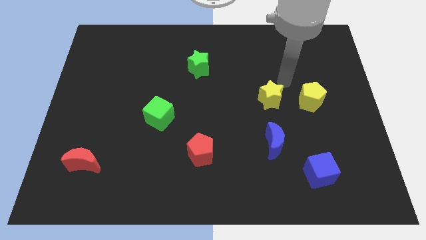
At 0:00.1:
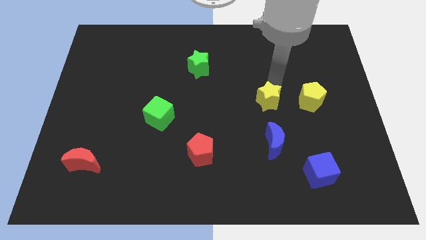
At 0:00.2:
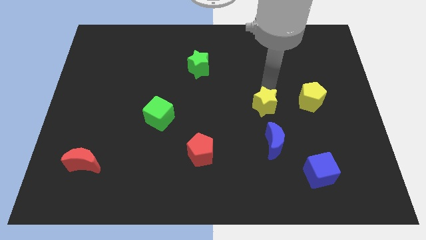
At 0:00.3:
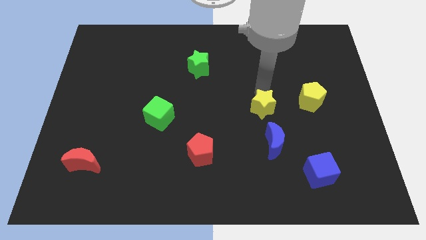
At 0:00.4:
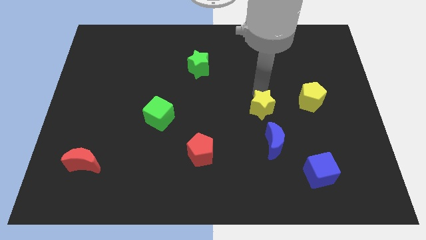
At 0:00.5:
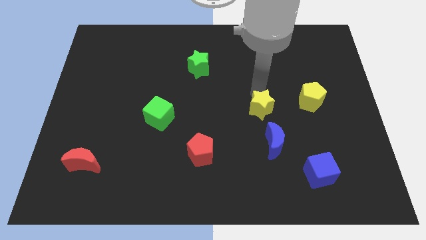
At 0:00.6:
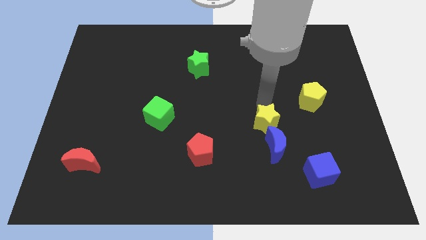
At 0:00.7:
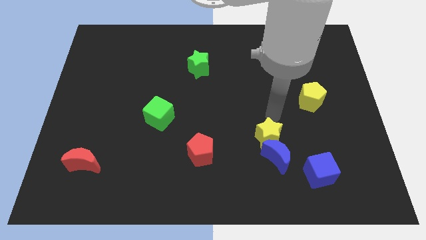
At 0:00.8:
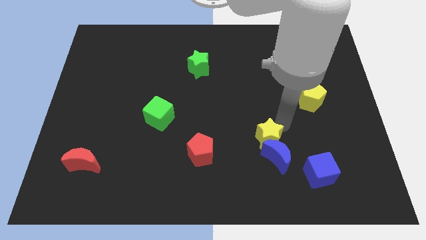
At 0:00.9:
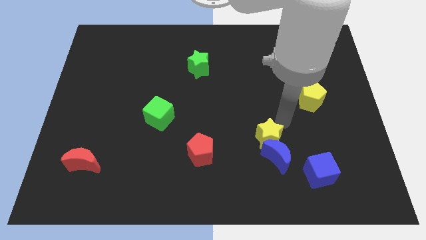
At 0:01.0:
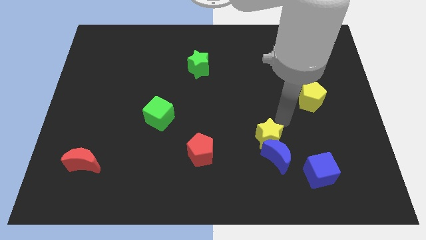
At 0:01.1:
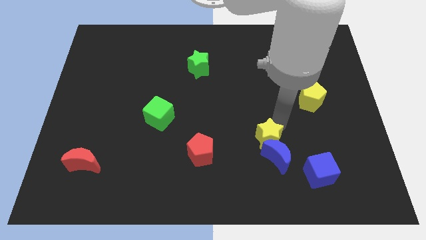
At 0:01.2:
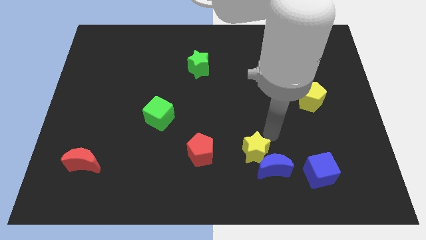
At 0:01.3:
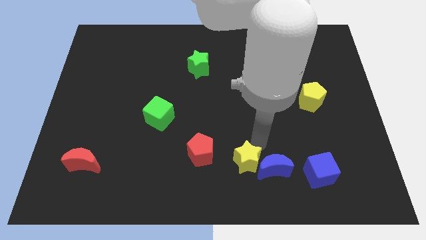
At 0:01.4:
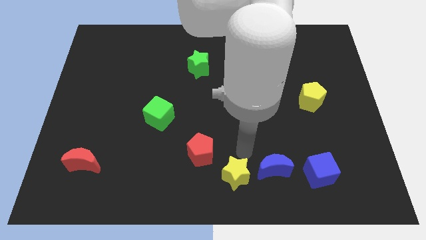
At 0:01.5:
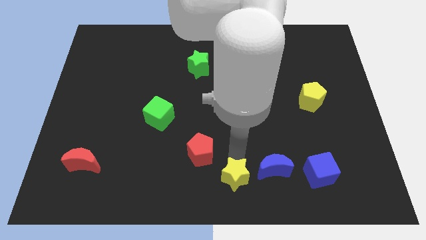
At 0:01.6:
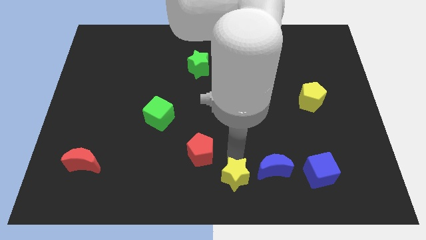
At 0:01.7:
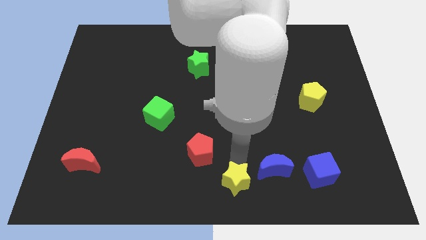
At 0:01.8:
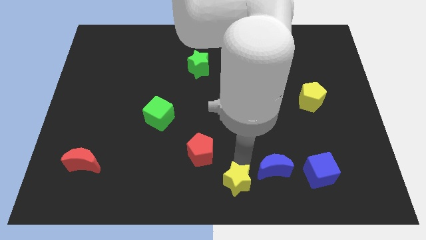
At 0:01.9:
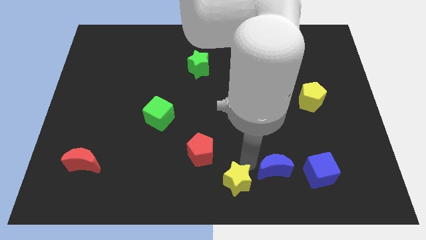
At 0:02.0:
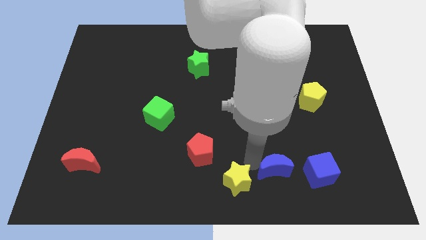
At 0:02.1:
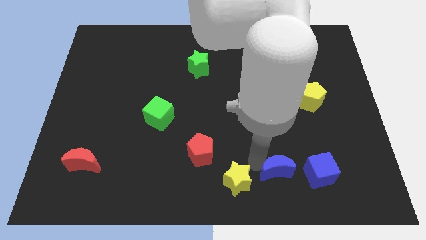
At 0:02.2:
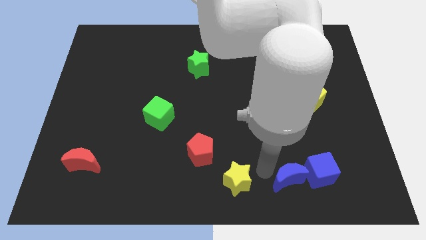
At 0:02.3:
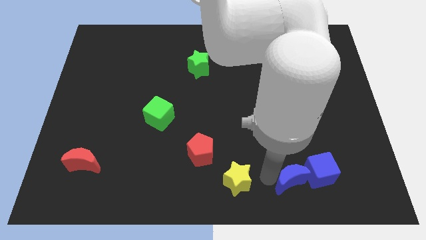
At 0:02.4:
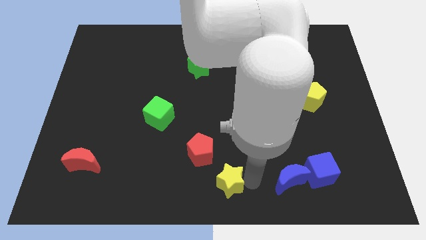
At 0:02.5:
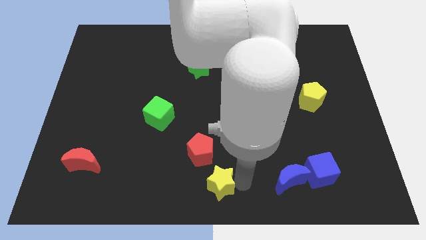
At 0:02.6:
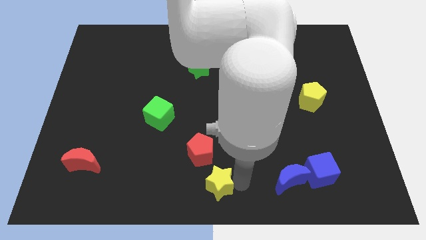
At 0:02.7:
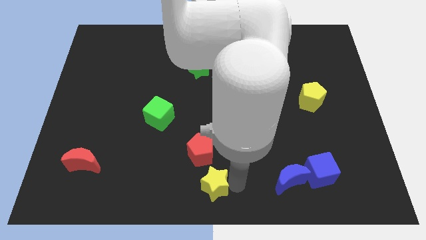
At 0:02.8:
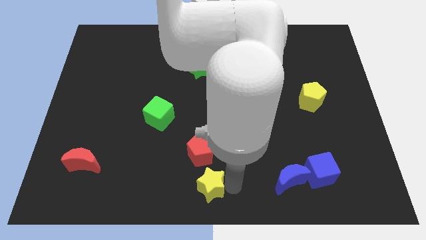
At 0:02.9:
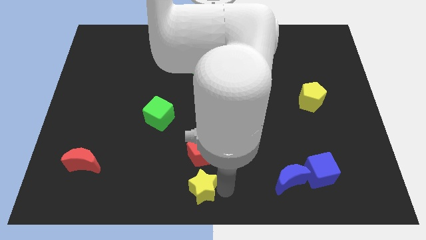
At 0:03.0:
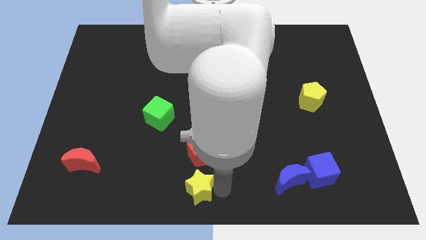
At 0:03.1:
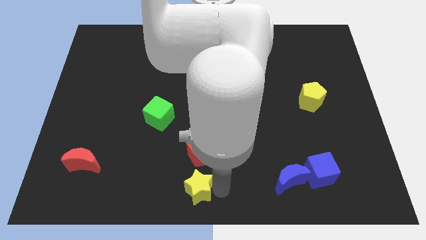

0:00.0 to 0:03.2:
move yellow star below the red pentagon

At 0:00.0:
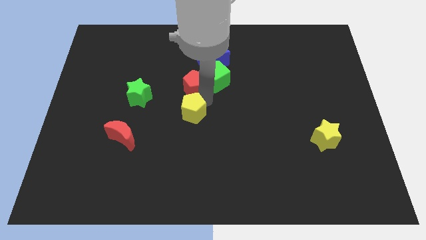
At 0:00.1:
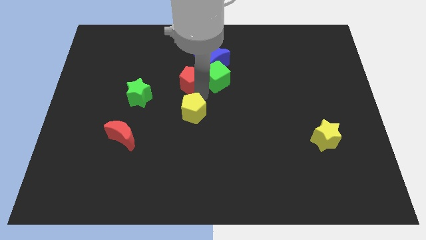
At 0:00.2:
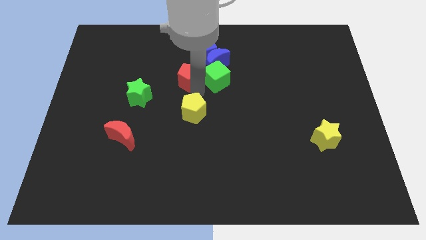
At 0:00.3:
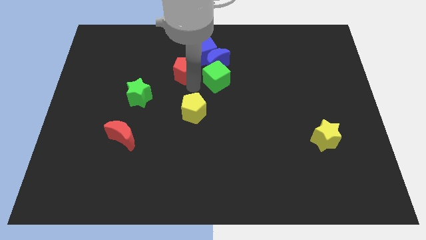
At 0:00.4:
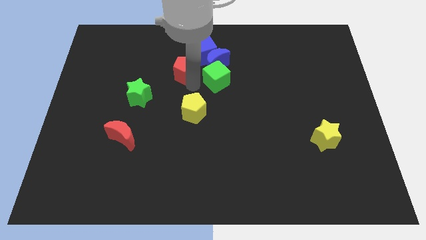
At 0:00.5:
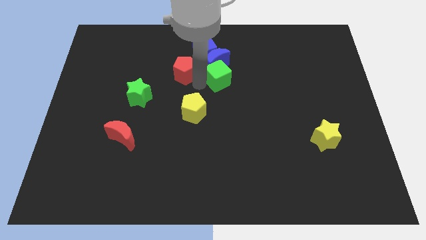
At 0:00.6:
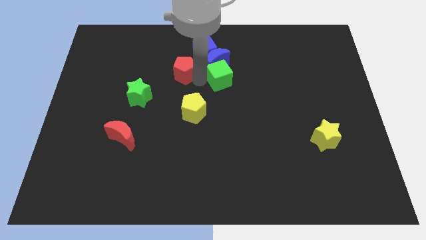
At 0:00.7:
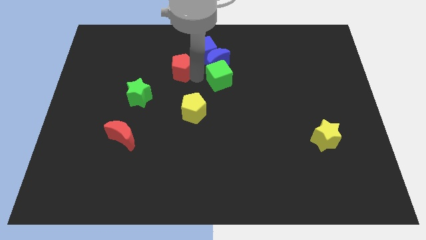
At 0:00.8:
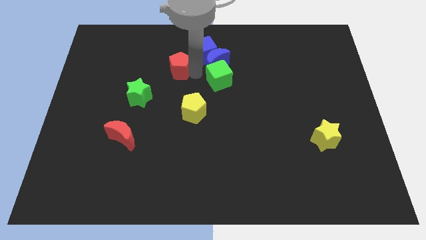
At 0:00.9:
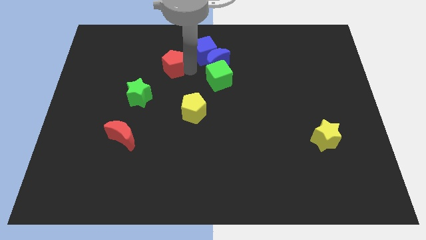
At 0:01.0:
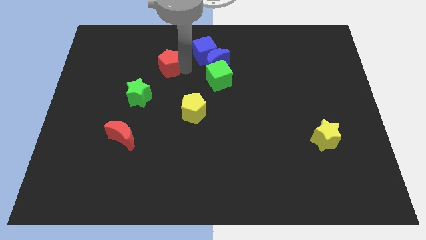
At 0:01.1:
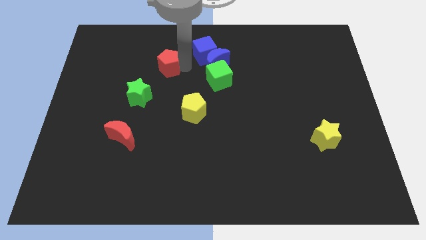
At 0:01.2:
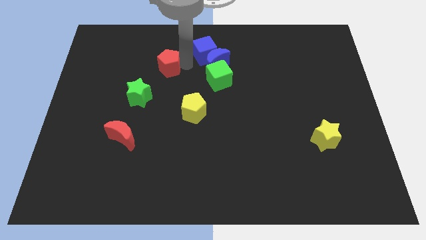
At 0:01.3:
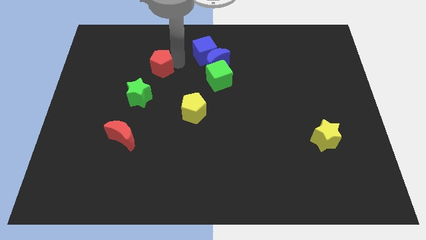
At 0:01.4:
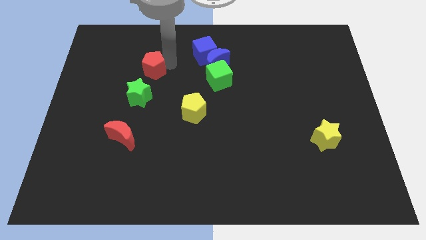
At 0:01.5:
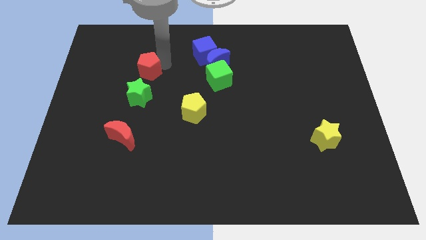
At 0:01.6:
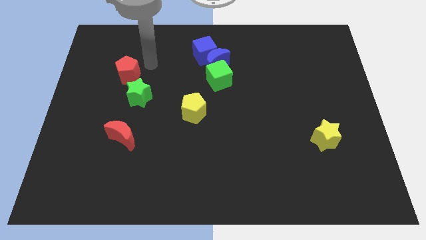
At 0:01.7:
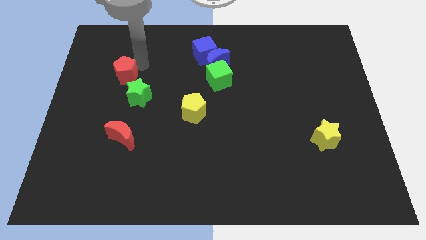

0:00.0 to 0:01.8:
separate the red pentagon from the yellow pentagon

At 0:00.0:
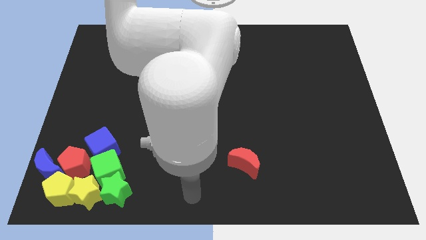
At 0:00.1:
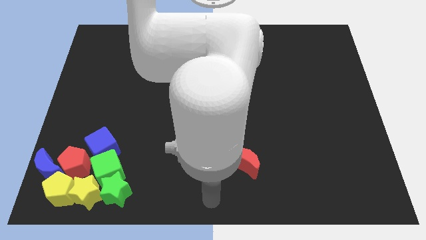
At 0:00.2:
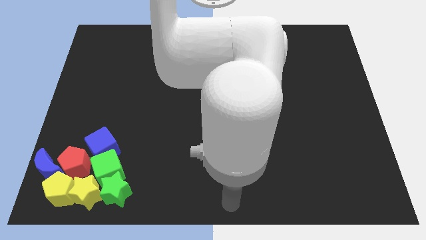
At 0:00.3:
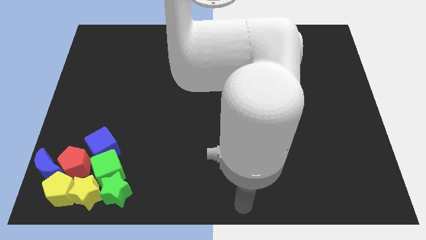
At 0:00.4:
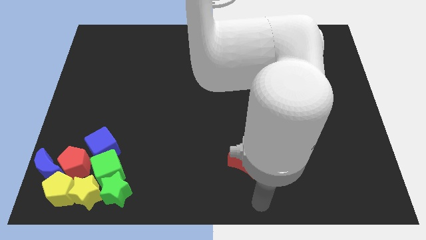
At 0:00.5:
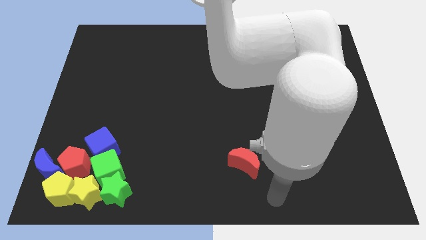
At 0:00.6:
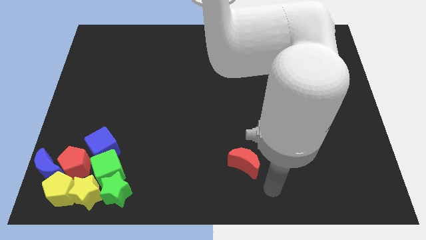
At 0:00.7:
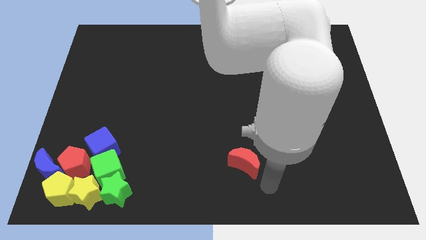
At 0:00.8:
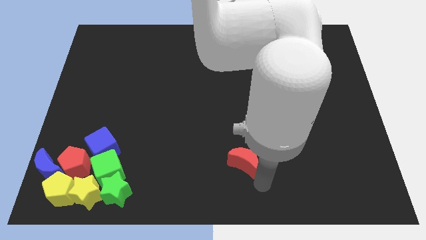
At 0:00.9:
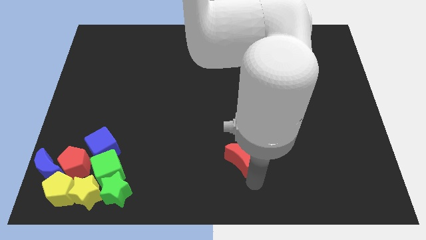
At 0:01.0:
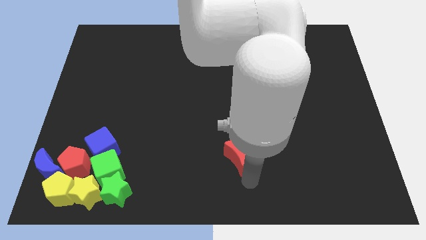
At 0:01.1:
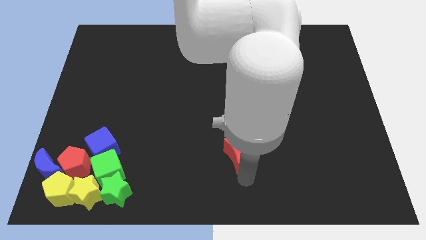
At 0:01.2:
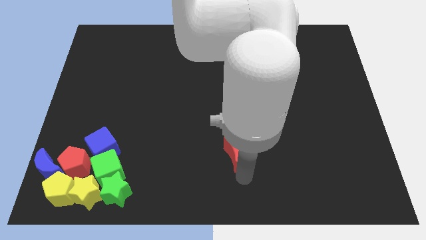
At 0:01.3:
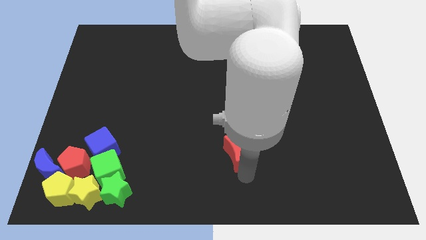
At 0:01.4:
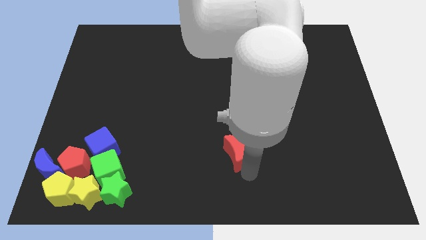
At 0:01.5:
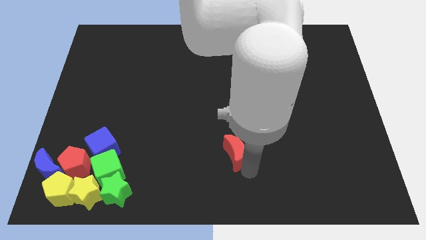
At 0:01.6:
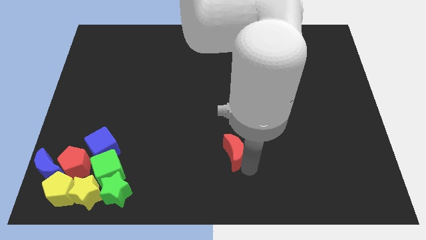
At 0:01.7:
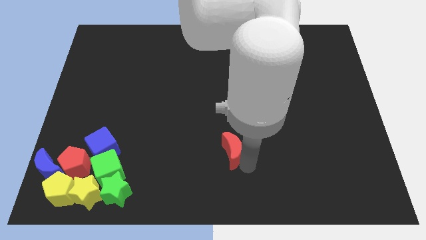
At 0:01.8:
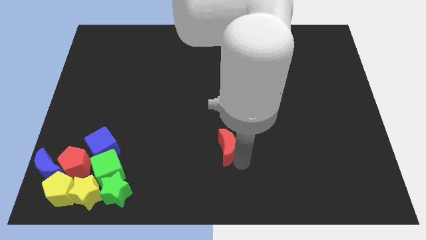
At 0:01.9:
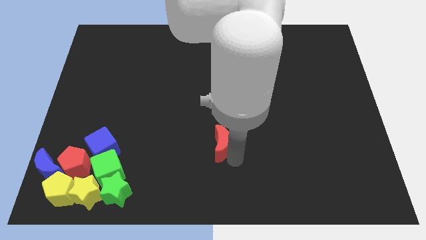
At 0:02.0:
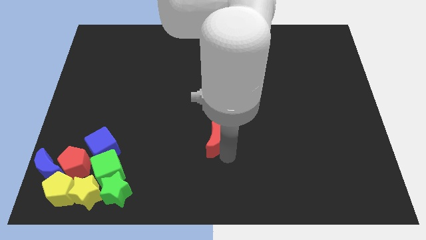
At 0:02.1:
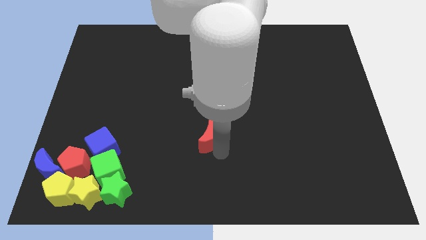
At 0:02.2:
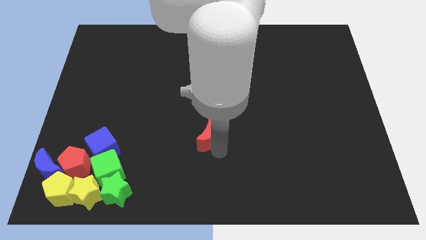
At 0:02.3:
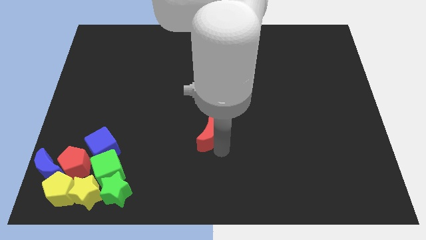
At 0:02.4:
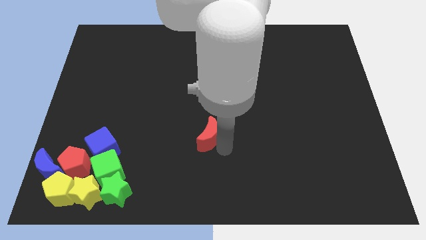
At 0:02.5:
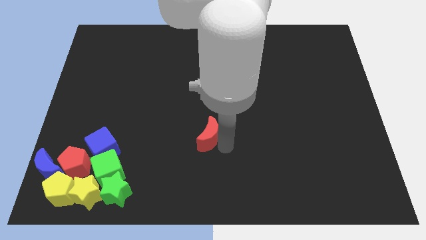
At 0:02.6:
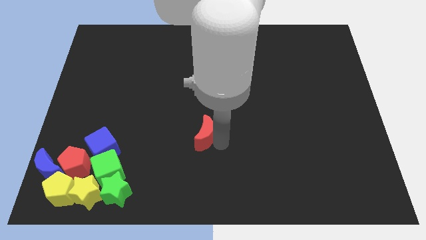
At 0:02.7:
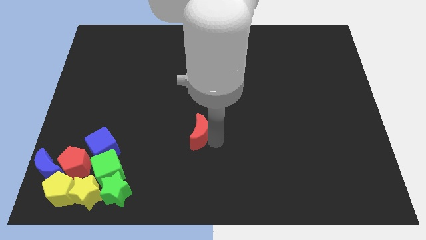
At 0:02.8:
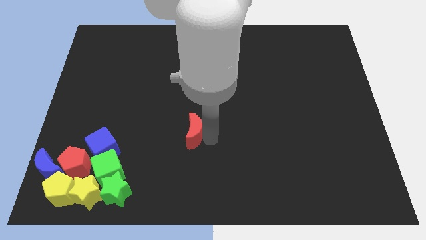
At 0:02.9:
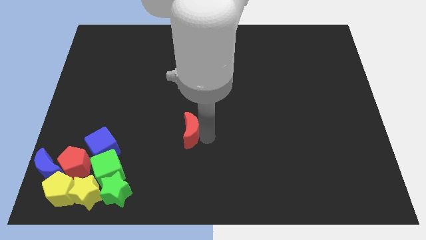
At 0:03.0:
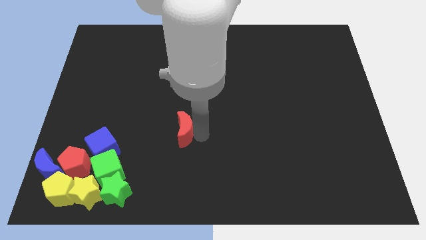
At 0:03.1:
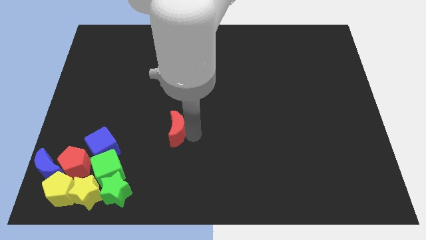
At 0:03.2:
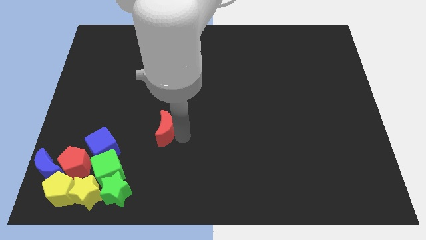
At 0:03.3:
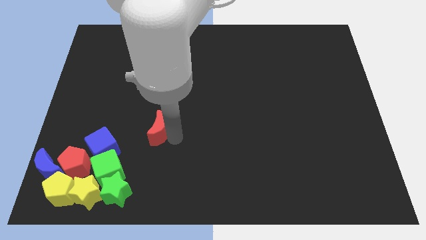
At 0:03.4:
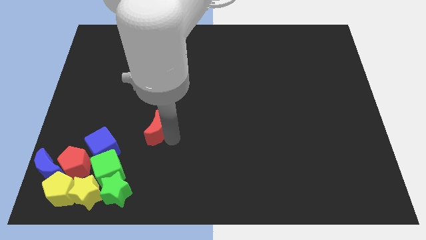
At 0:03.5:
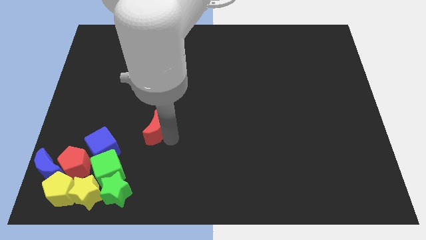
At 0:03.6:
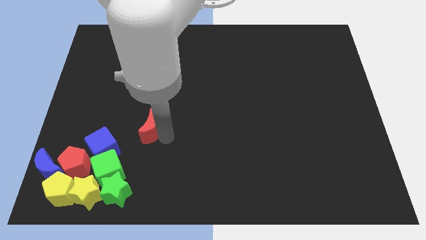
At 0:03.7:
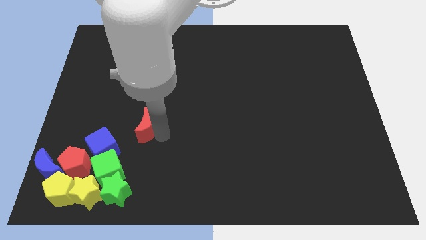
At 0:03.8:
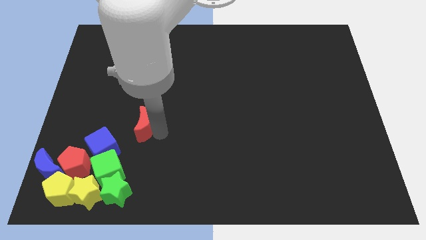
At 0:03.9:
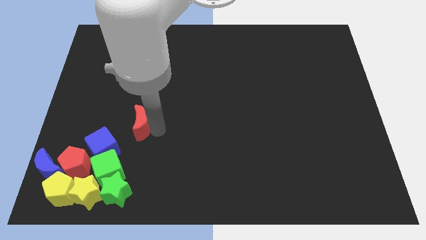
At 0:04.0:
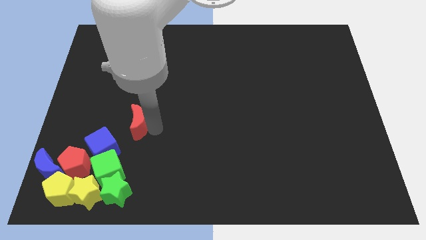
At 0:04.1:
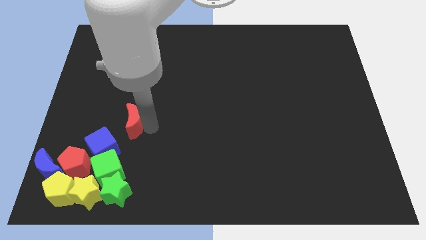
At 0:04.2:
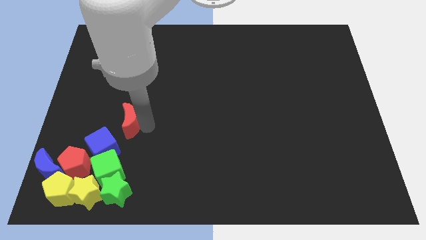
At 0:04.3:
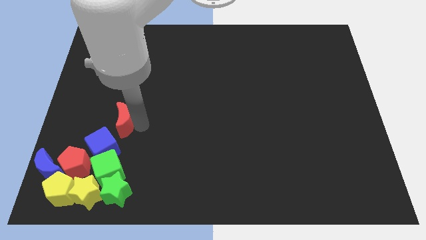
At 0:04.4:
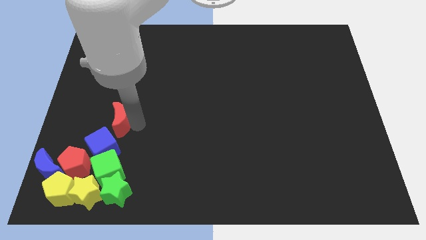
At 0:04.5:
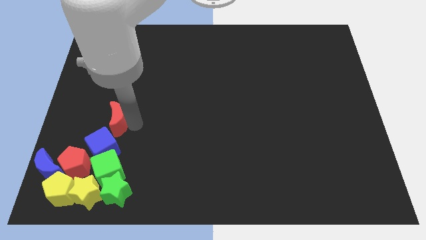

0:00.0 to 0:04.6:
place the red crescent above the blue cube
